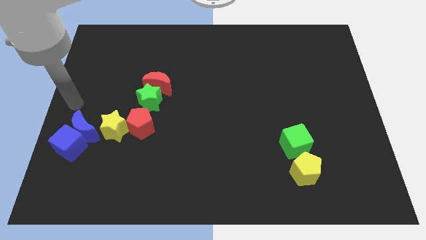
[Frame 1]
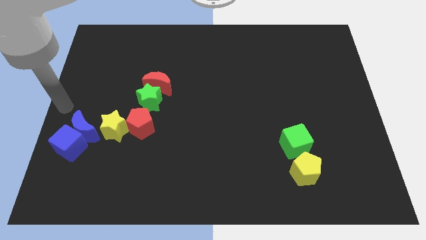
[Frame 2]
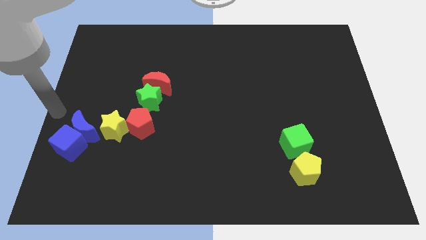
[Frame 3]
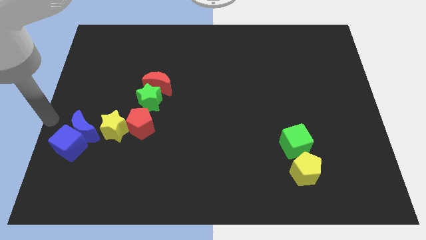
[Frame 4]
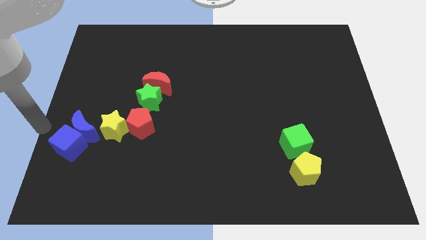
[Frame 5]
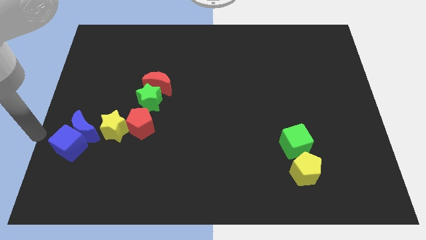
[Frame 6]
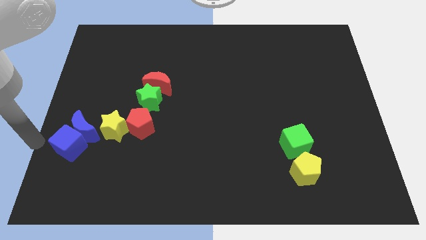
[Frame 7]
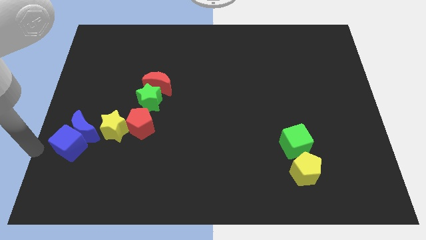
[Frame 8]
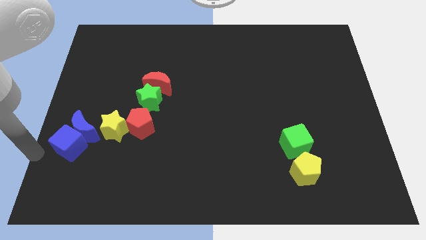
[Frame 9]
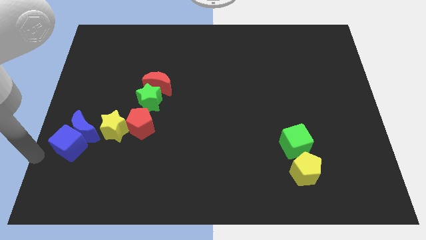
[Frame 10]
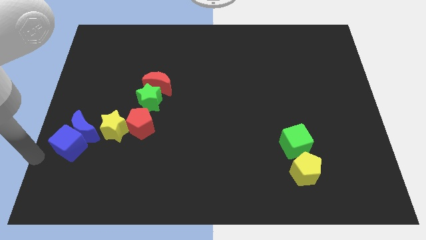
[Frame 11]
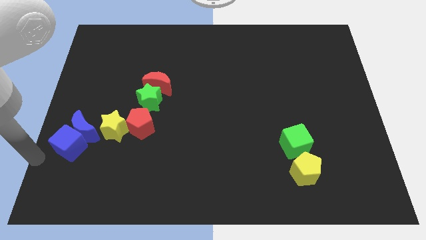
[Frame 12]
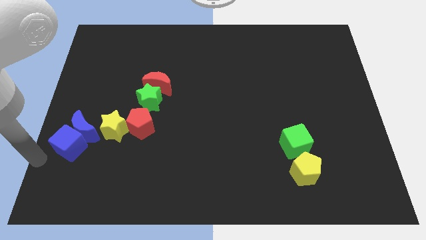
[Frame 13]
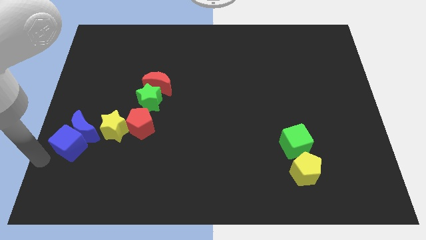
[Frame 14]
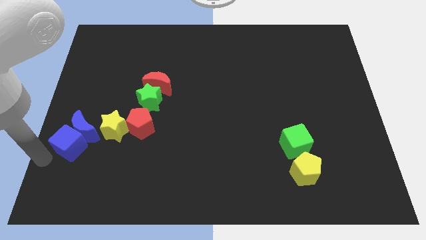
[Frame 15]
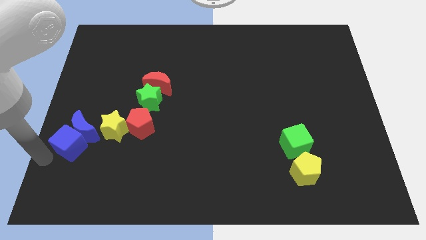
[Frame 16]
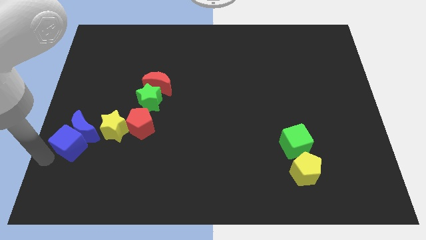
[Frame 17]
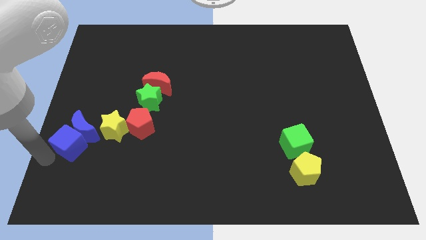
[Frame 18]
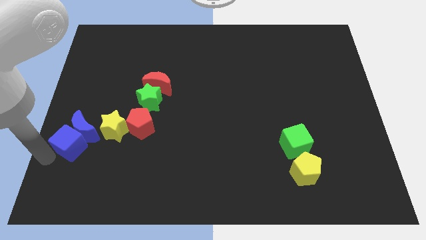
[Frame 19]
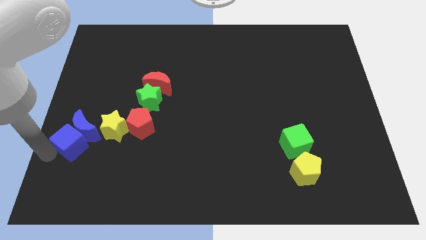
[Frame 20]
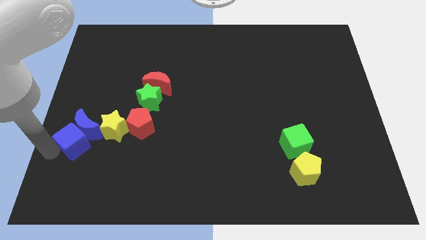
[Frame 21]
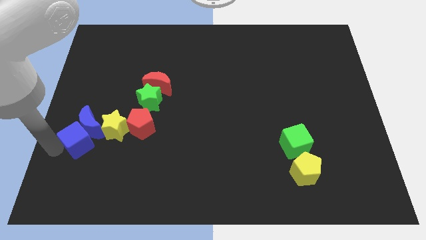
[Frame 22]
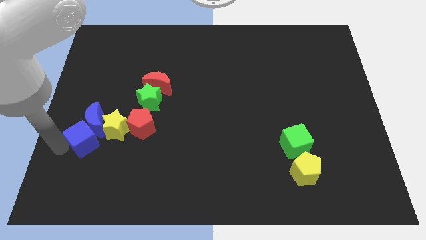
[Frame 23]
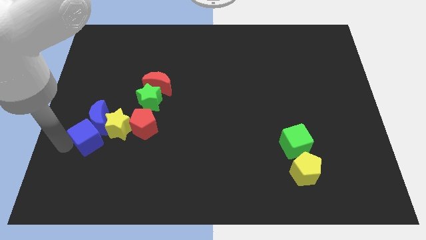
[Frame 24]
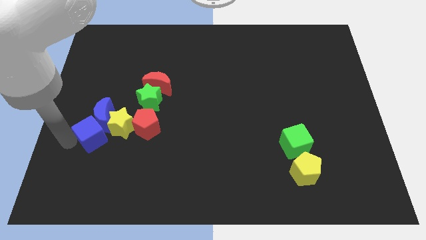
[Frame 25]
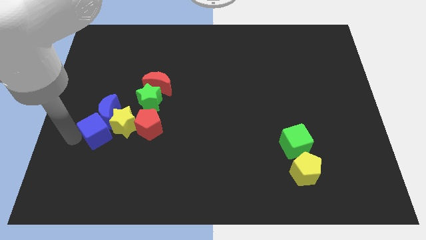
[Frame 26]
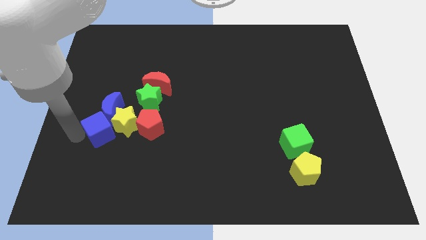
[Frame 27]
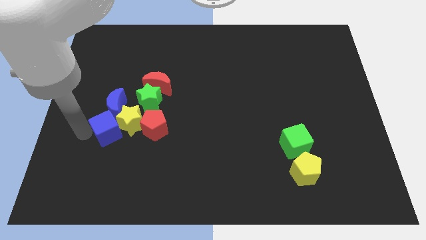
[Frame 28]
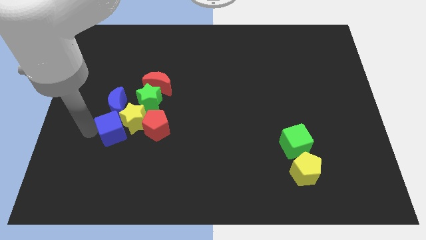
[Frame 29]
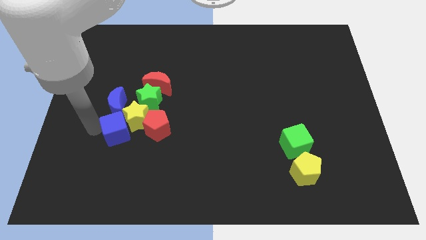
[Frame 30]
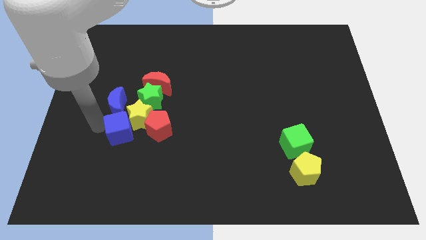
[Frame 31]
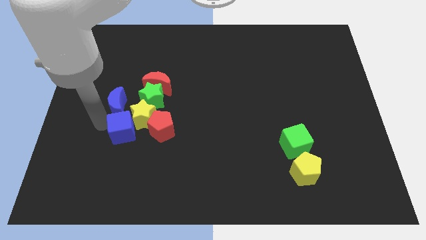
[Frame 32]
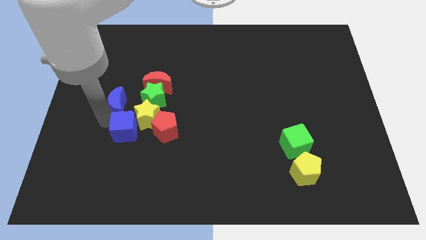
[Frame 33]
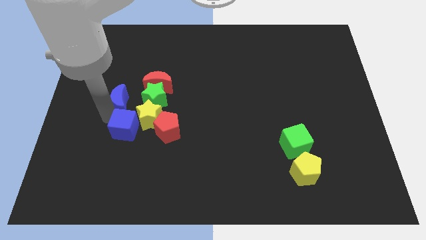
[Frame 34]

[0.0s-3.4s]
push the blue cube to the left side of the yellow star

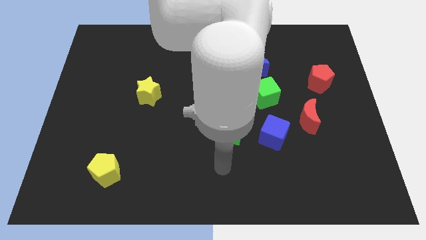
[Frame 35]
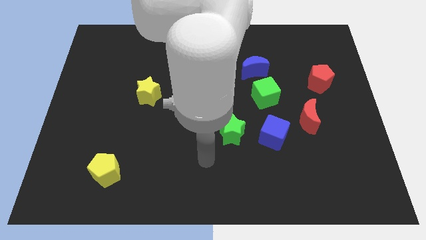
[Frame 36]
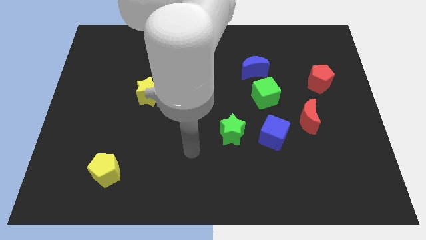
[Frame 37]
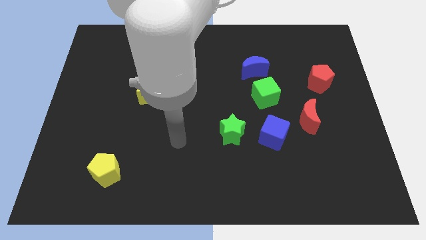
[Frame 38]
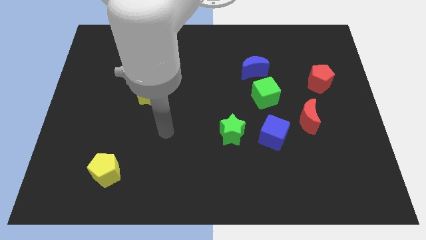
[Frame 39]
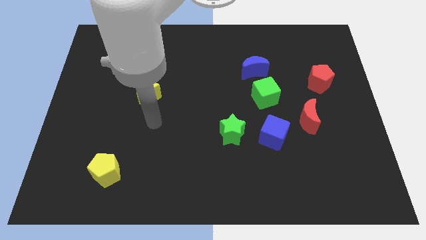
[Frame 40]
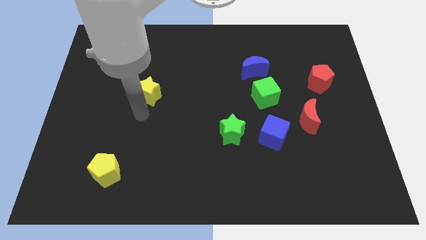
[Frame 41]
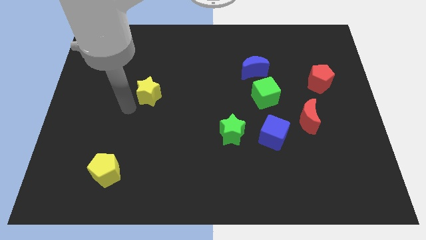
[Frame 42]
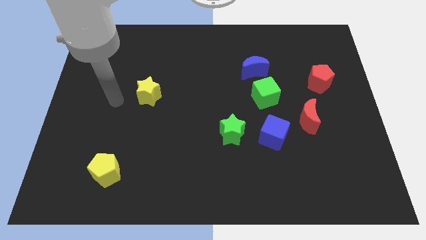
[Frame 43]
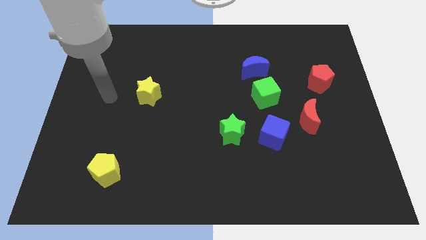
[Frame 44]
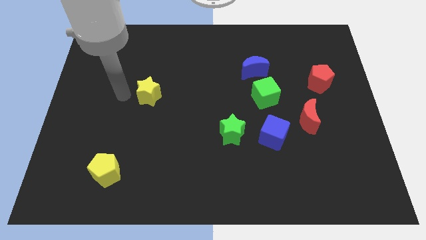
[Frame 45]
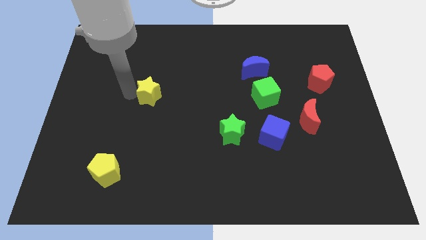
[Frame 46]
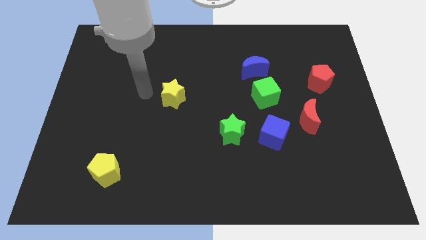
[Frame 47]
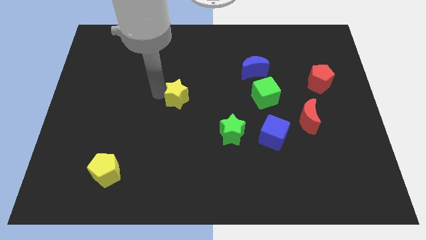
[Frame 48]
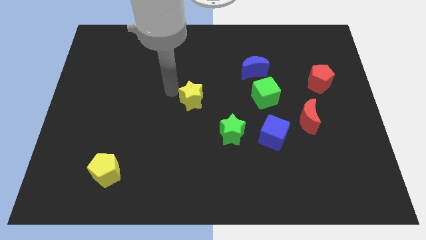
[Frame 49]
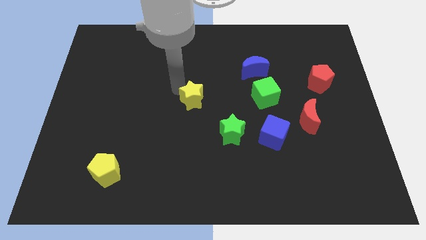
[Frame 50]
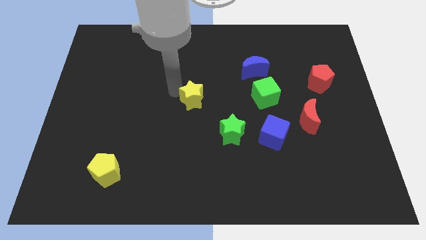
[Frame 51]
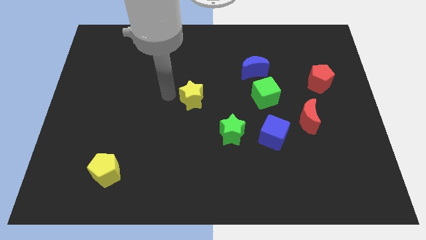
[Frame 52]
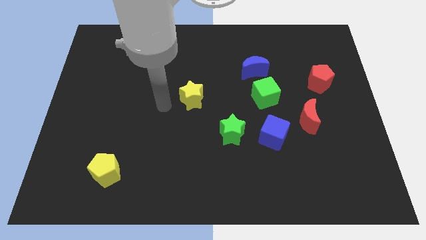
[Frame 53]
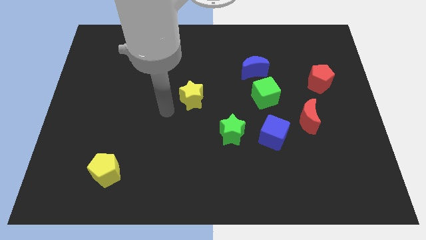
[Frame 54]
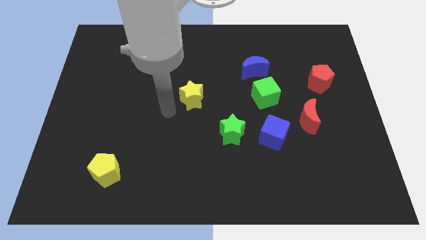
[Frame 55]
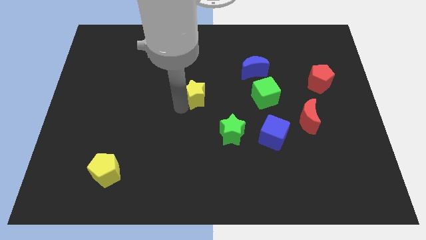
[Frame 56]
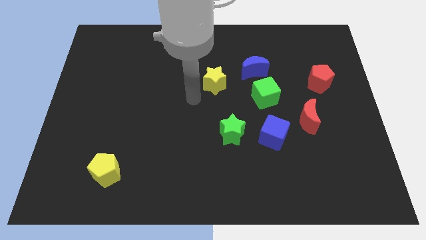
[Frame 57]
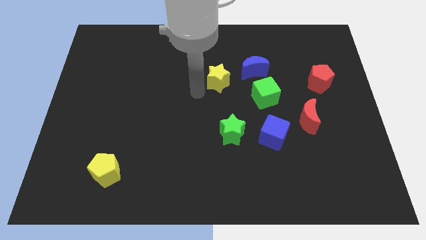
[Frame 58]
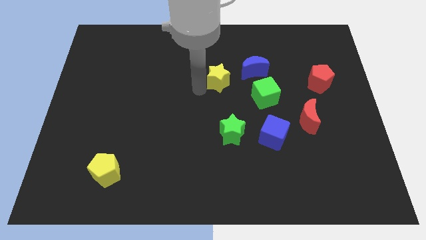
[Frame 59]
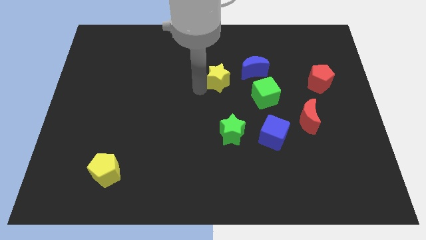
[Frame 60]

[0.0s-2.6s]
move yellow star above green star

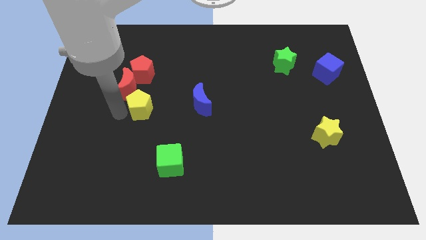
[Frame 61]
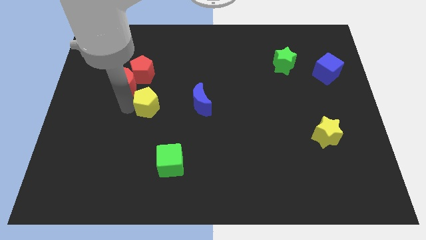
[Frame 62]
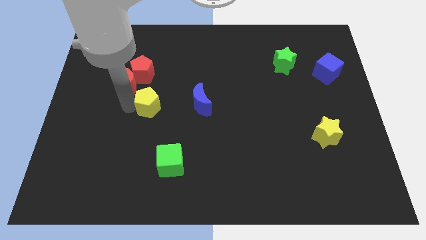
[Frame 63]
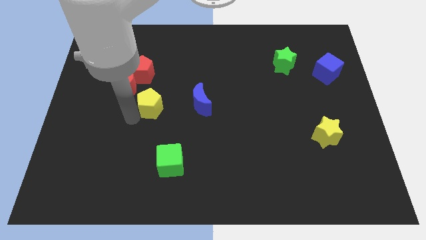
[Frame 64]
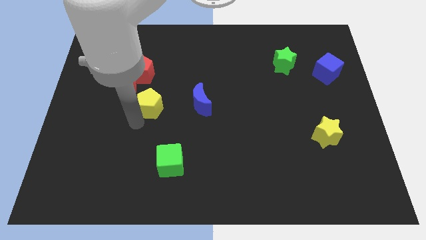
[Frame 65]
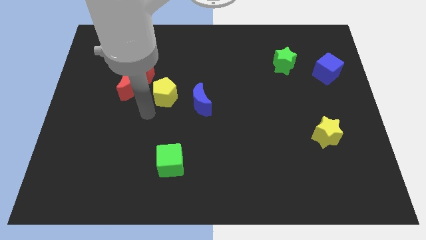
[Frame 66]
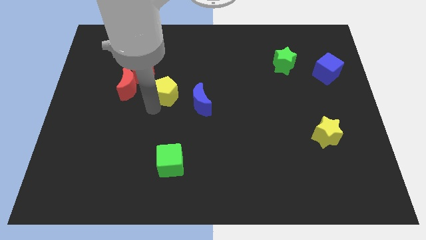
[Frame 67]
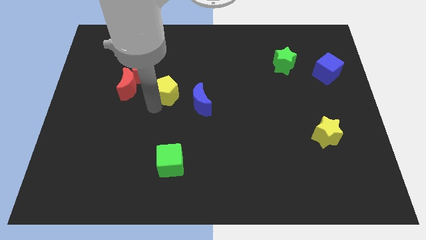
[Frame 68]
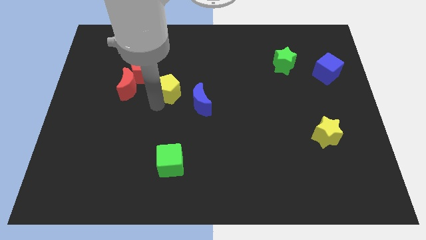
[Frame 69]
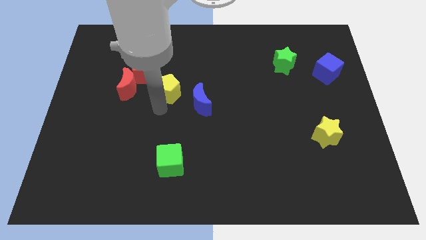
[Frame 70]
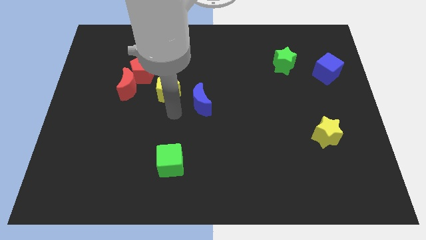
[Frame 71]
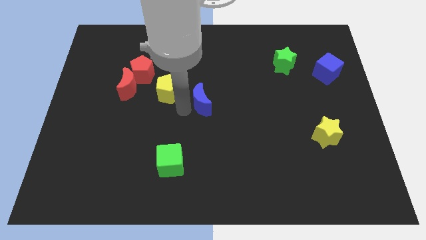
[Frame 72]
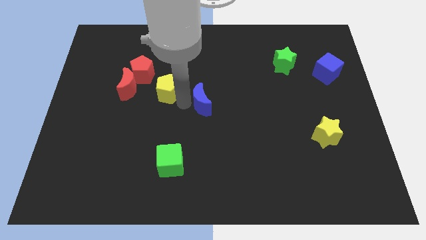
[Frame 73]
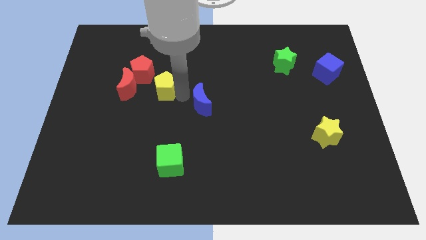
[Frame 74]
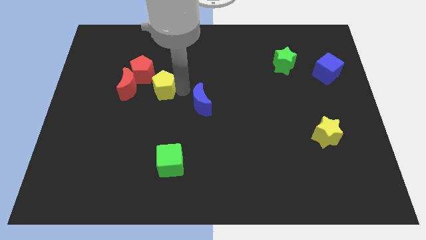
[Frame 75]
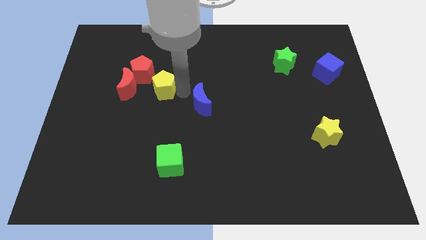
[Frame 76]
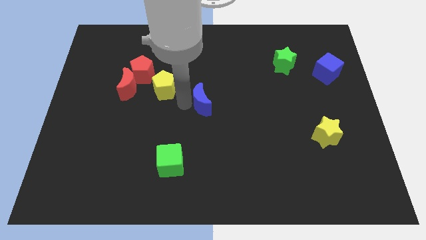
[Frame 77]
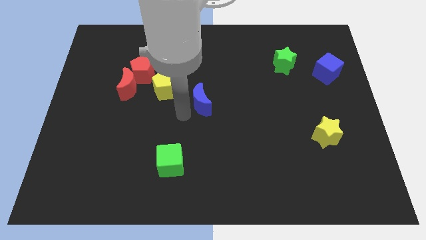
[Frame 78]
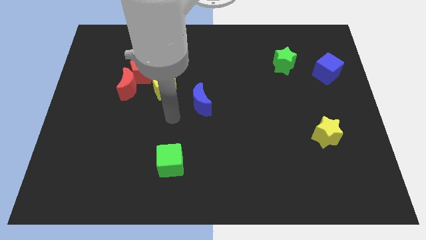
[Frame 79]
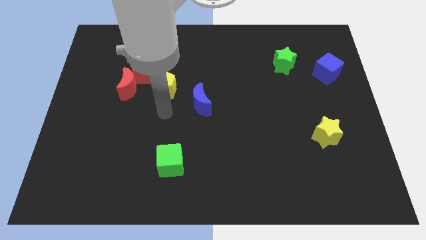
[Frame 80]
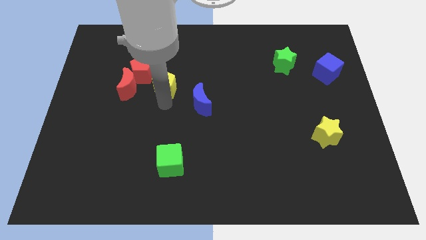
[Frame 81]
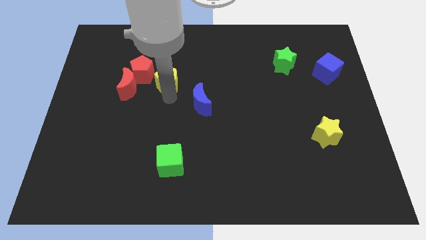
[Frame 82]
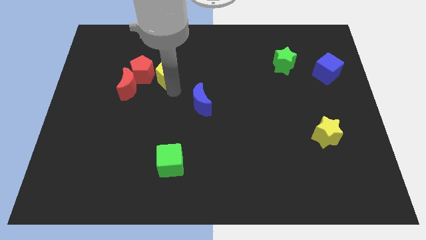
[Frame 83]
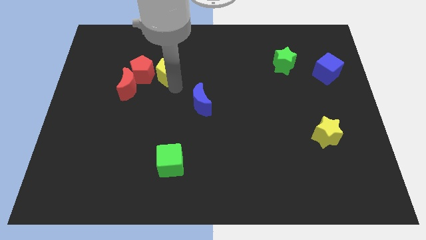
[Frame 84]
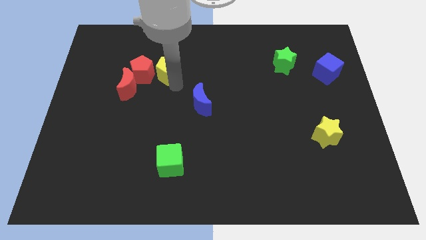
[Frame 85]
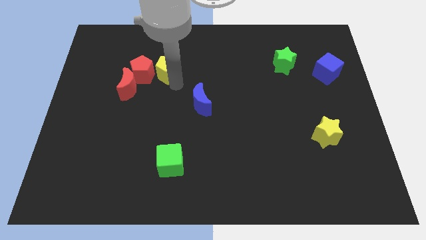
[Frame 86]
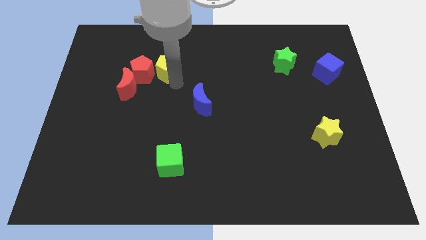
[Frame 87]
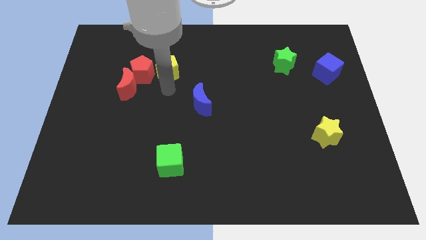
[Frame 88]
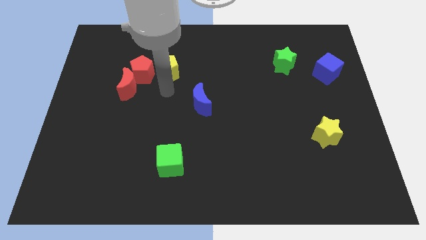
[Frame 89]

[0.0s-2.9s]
place the yellow pentagon to the right of the red pentagon

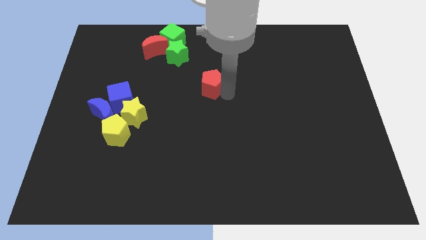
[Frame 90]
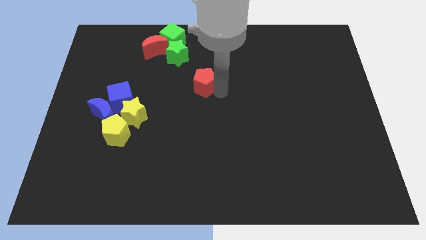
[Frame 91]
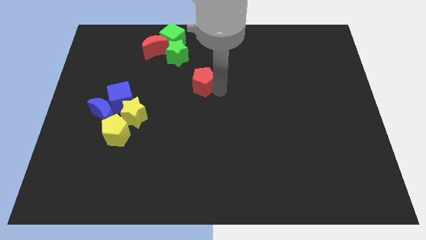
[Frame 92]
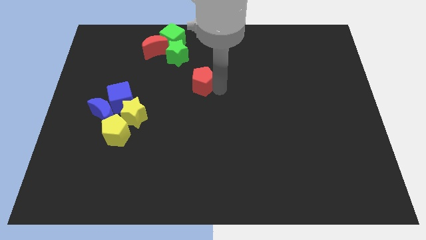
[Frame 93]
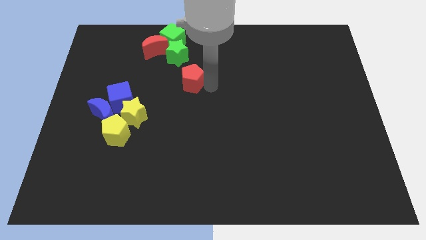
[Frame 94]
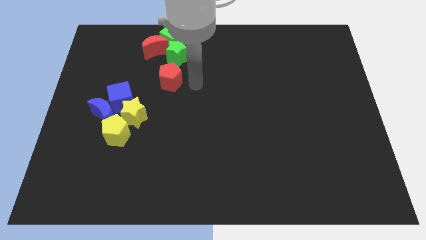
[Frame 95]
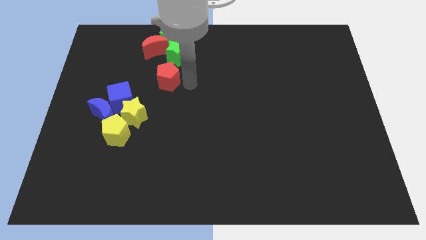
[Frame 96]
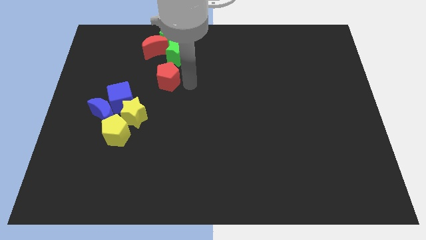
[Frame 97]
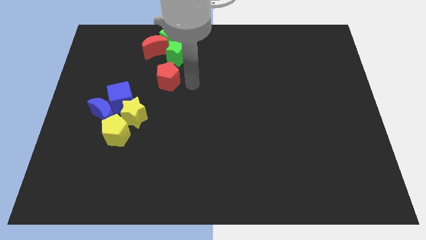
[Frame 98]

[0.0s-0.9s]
push the red pentagon below the green star
